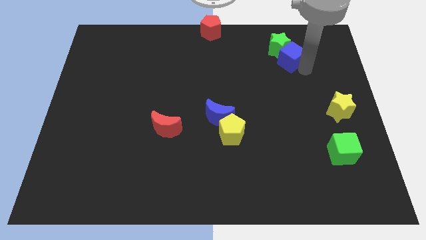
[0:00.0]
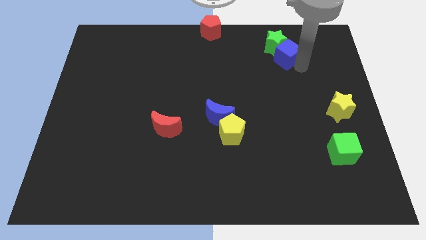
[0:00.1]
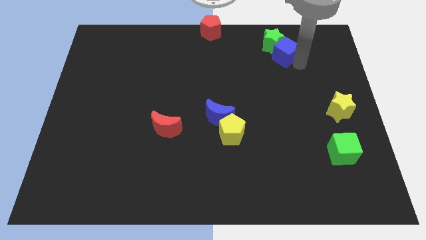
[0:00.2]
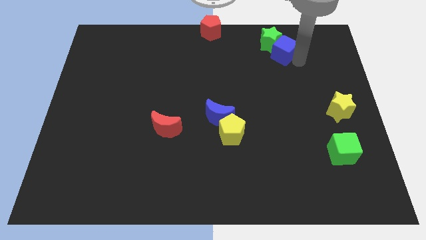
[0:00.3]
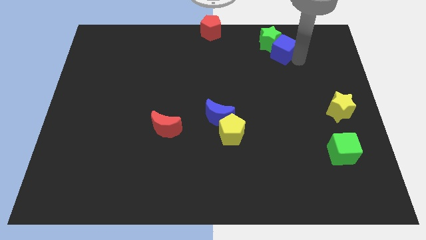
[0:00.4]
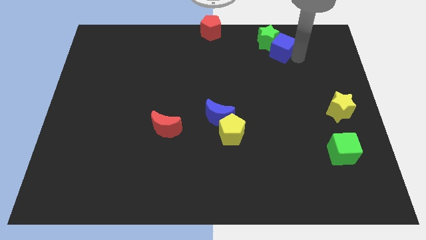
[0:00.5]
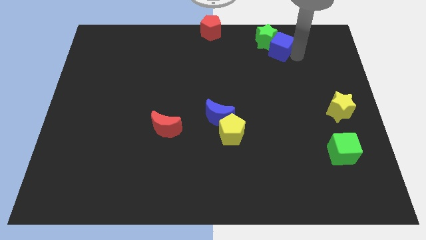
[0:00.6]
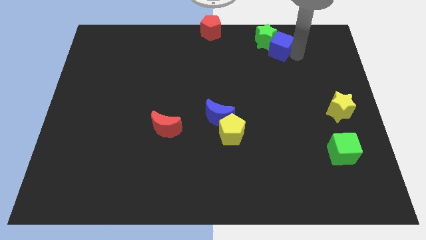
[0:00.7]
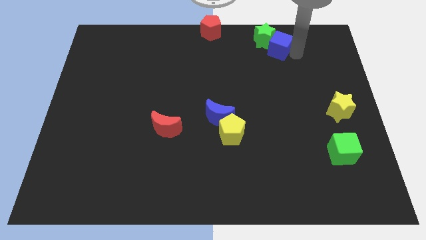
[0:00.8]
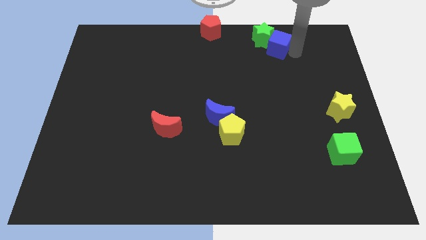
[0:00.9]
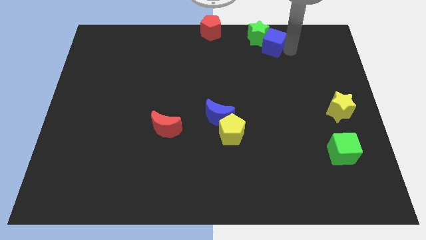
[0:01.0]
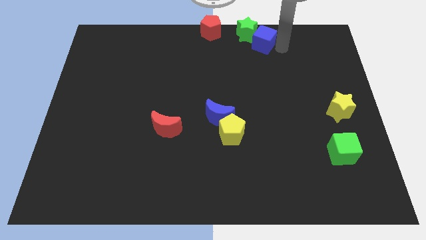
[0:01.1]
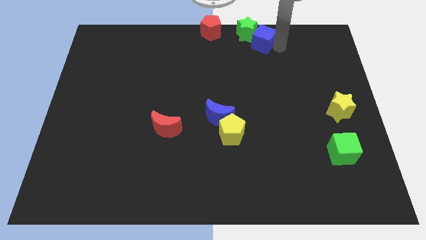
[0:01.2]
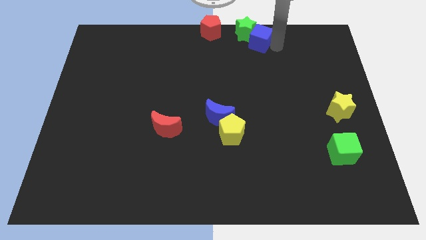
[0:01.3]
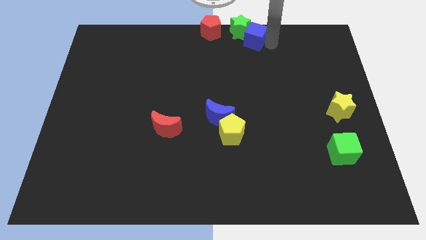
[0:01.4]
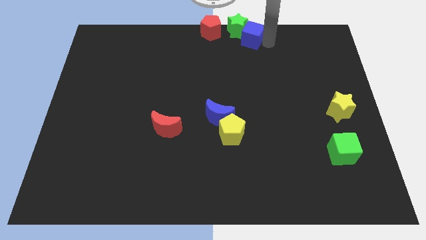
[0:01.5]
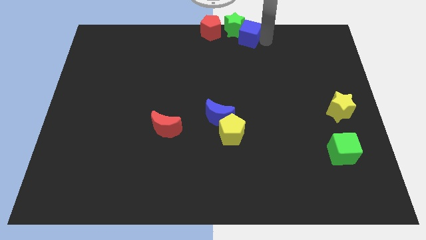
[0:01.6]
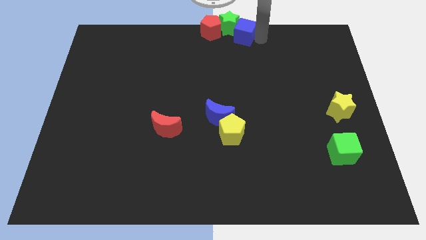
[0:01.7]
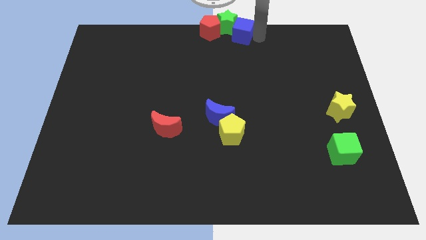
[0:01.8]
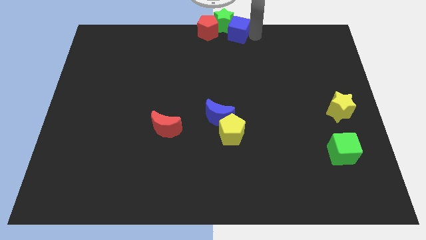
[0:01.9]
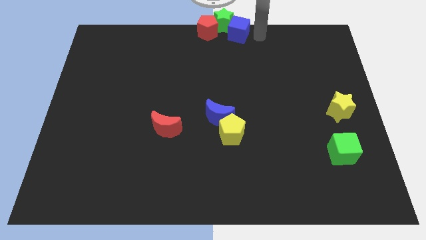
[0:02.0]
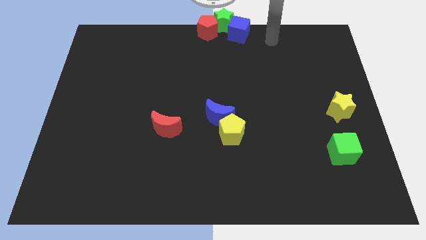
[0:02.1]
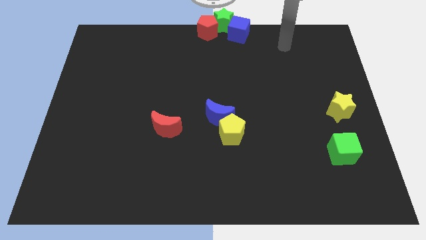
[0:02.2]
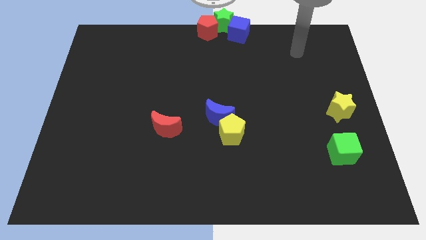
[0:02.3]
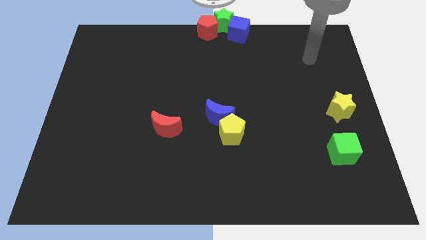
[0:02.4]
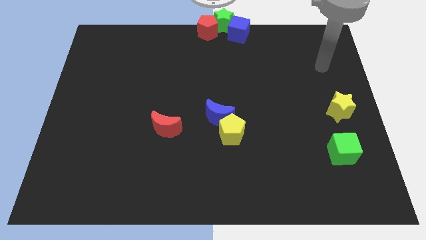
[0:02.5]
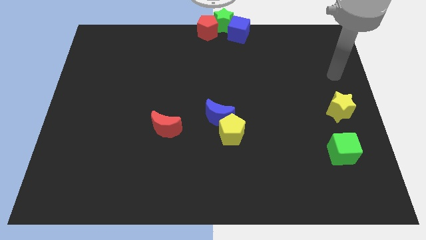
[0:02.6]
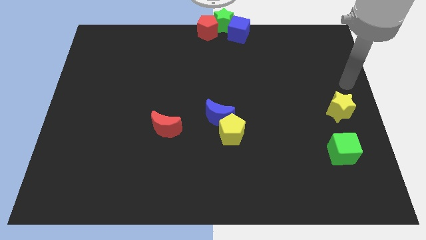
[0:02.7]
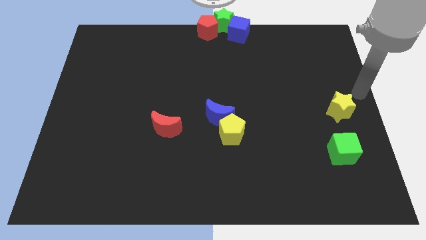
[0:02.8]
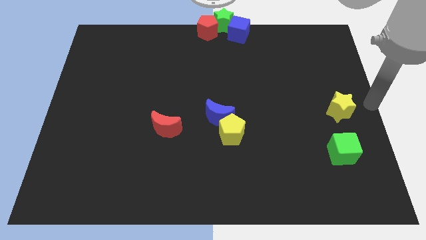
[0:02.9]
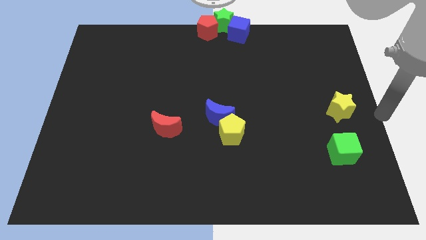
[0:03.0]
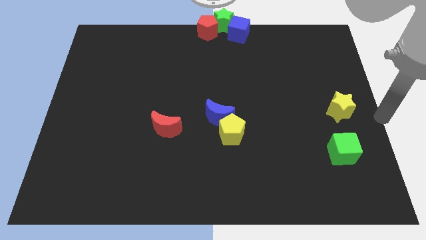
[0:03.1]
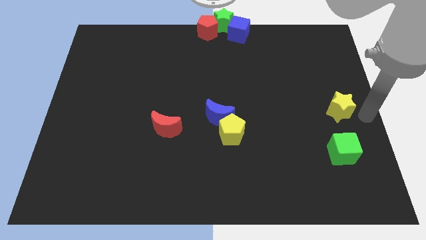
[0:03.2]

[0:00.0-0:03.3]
move the blue cube and green star at the top center of the board

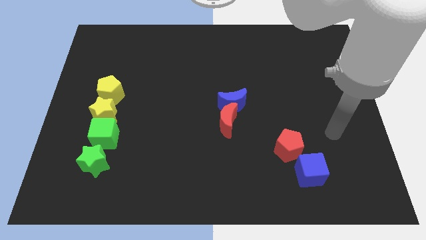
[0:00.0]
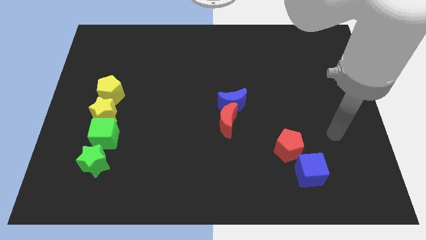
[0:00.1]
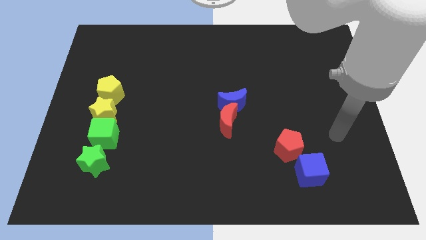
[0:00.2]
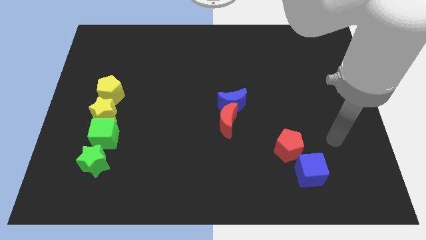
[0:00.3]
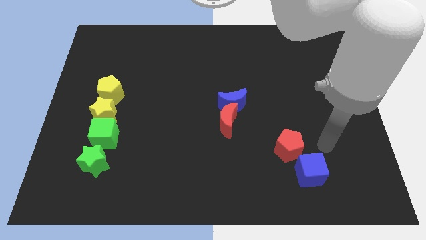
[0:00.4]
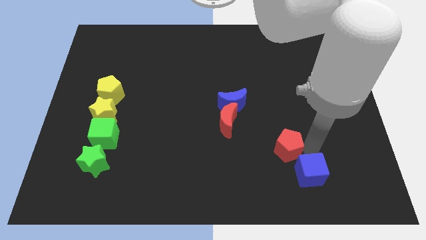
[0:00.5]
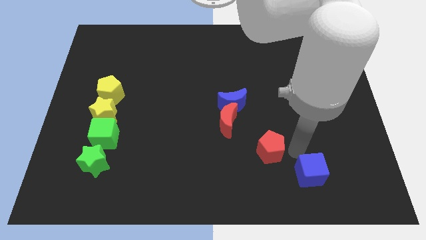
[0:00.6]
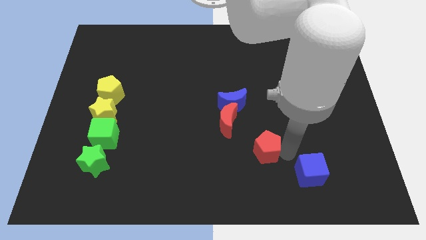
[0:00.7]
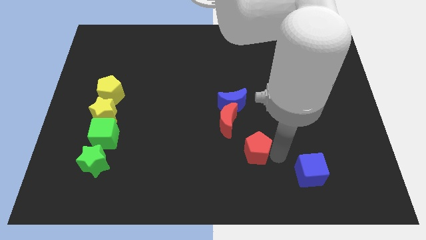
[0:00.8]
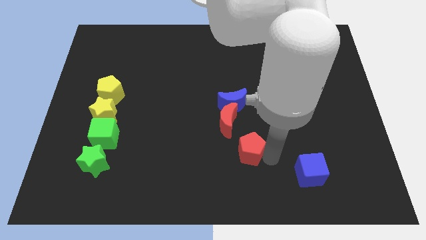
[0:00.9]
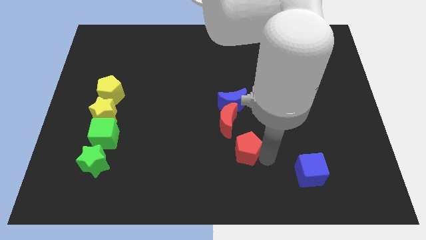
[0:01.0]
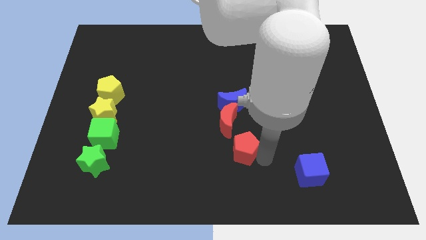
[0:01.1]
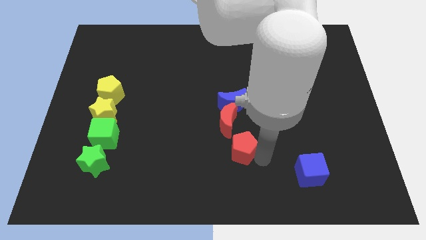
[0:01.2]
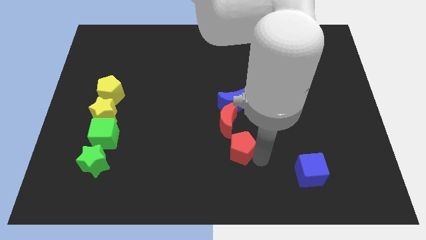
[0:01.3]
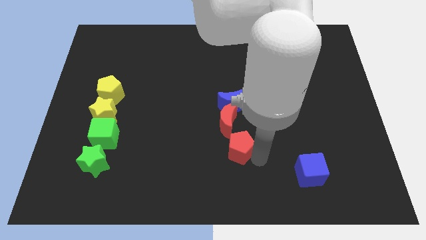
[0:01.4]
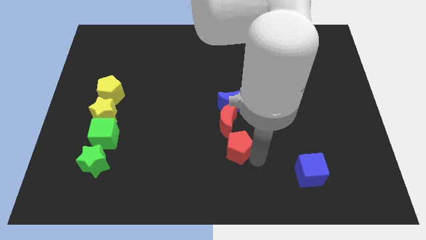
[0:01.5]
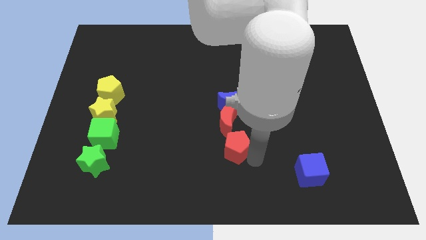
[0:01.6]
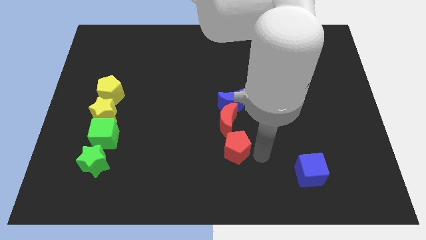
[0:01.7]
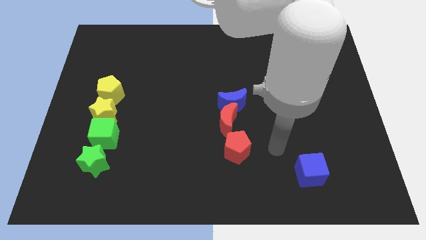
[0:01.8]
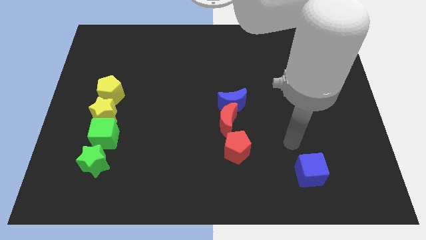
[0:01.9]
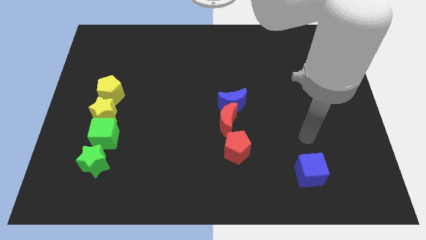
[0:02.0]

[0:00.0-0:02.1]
slide red pentagon below the red moon

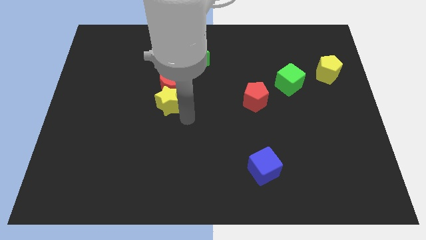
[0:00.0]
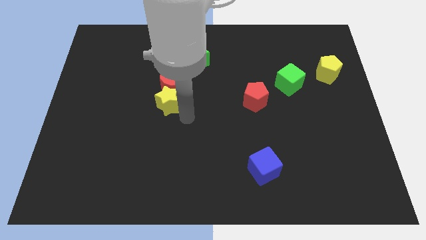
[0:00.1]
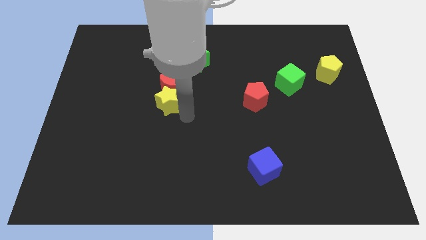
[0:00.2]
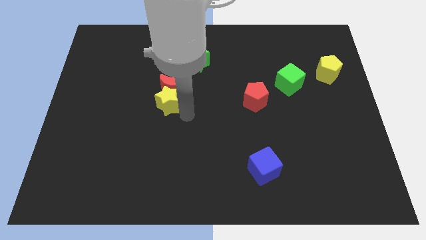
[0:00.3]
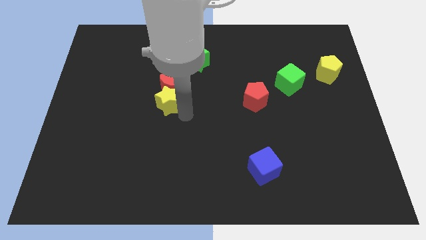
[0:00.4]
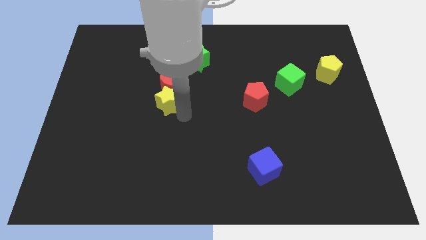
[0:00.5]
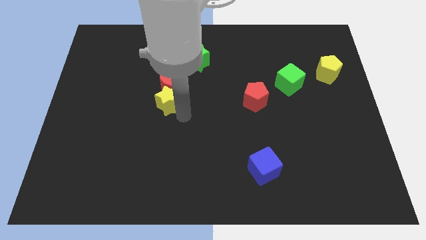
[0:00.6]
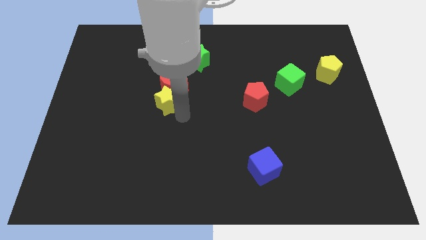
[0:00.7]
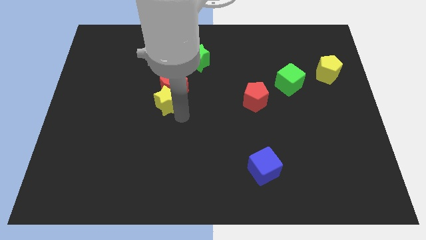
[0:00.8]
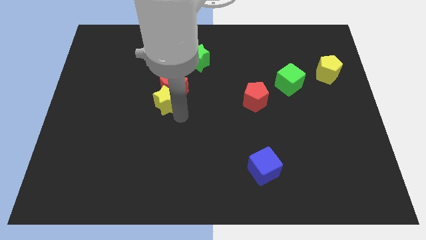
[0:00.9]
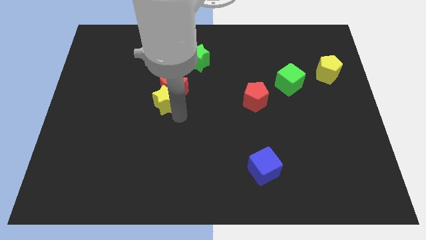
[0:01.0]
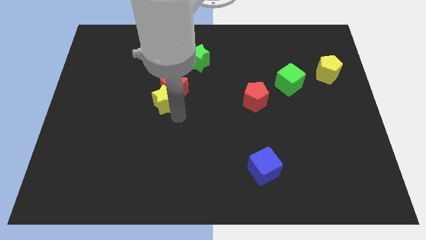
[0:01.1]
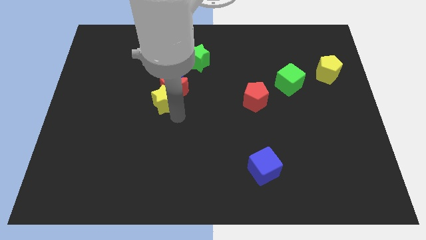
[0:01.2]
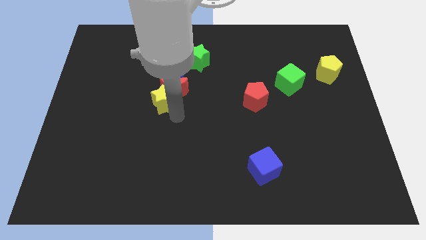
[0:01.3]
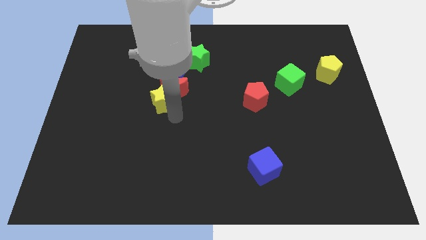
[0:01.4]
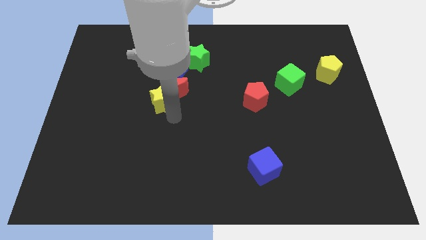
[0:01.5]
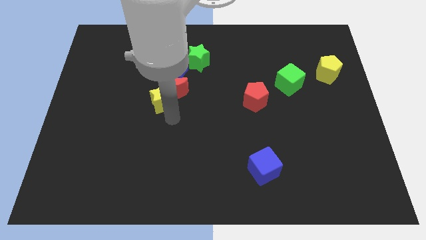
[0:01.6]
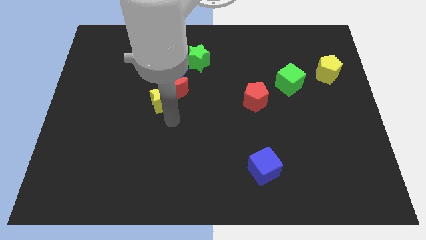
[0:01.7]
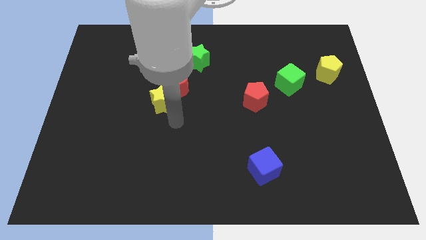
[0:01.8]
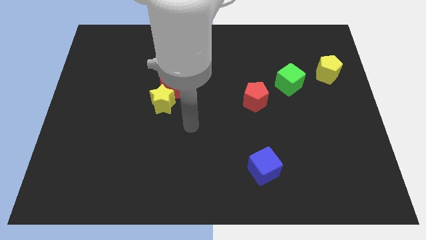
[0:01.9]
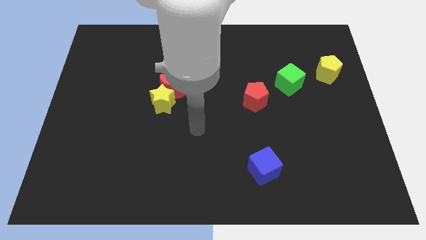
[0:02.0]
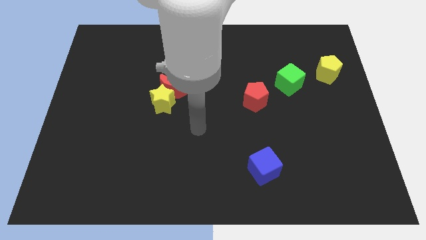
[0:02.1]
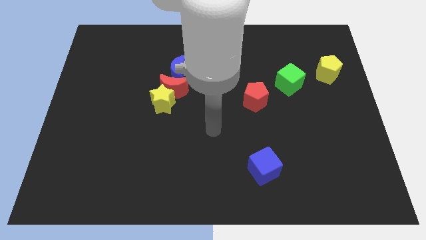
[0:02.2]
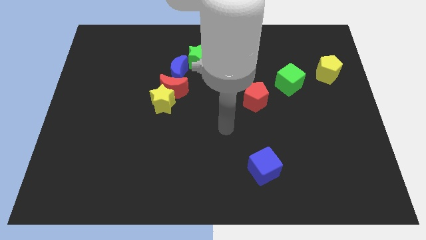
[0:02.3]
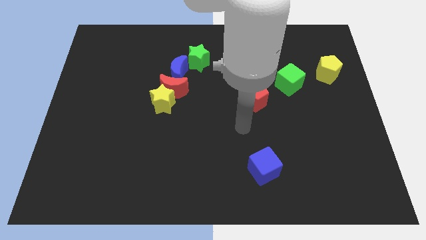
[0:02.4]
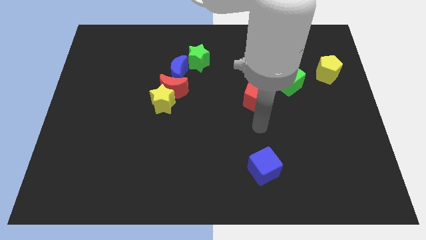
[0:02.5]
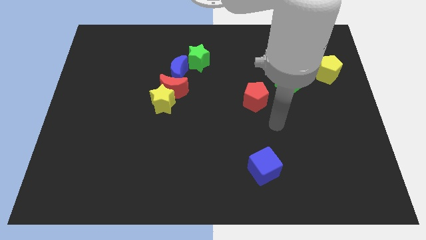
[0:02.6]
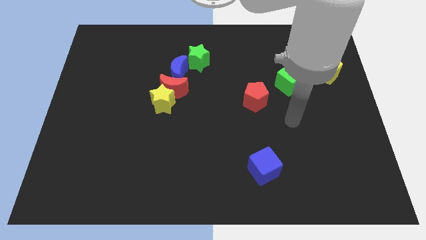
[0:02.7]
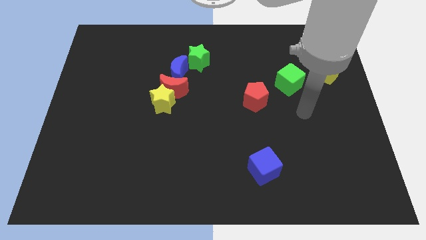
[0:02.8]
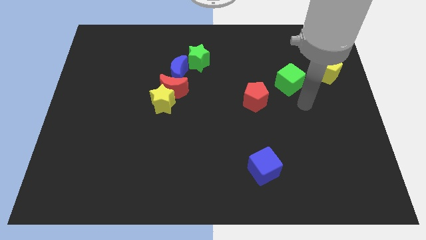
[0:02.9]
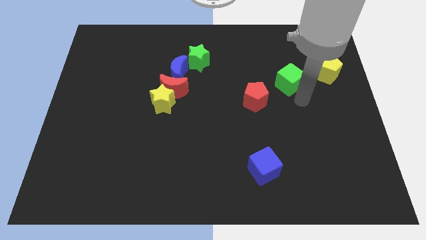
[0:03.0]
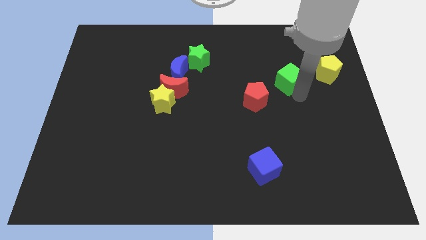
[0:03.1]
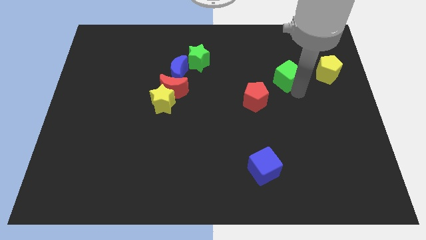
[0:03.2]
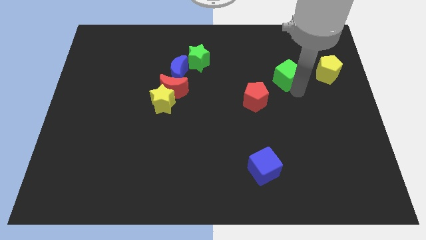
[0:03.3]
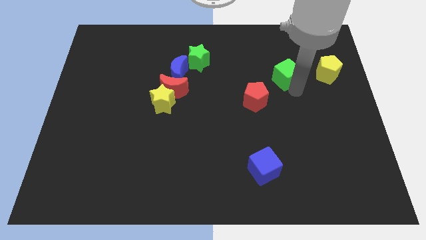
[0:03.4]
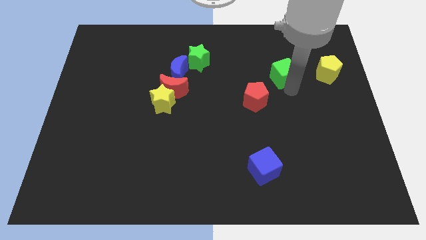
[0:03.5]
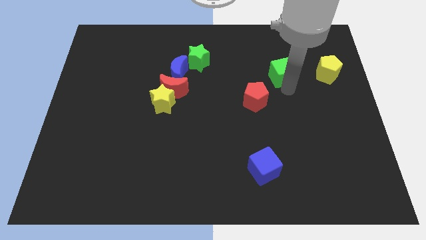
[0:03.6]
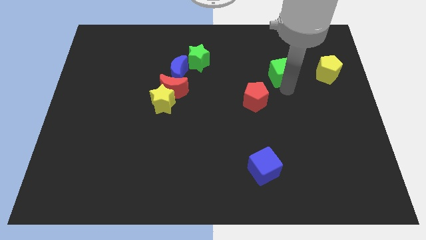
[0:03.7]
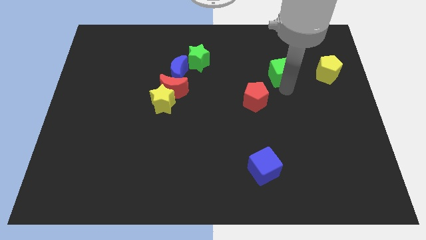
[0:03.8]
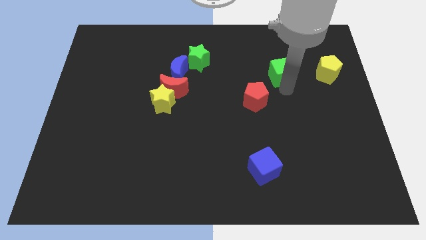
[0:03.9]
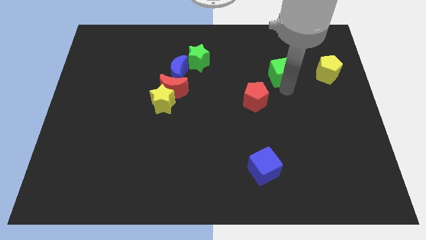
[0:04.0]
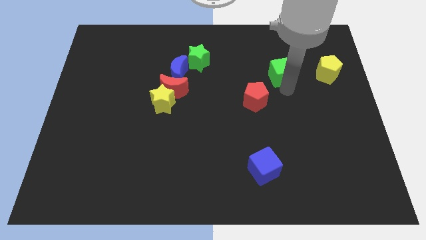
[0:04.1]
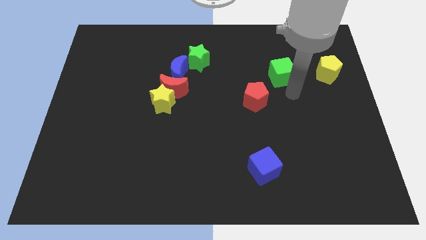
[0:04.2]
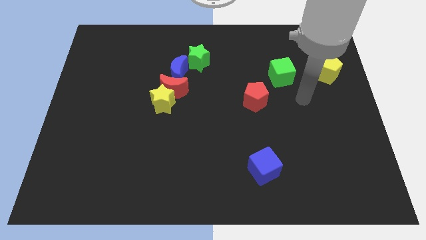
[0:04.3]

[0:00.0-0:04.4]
slightly move the green cube towards the top center of the board
